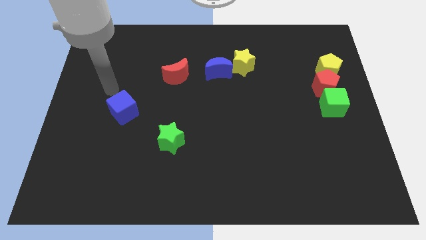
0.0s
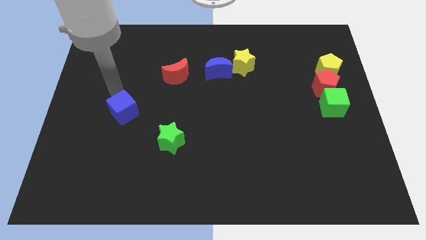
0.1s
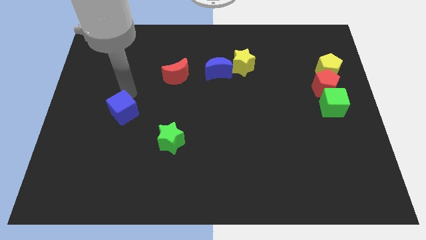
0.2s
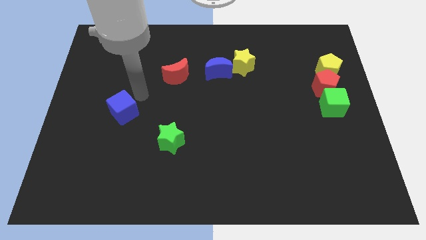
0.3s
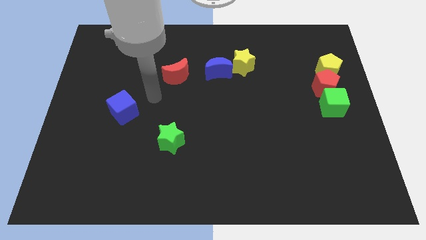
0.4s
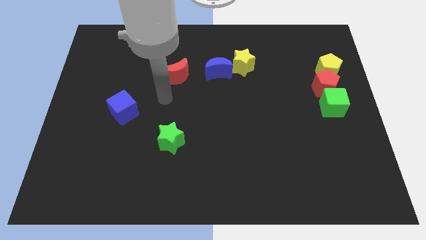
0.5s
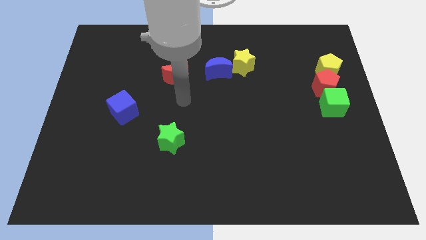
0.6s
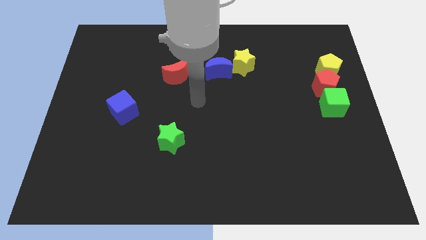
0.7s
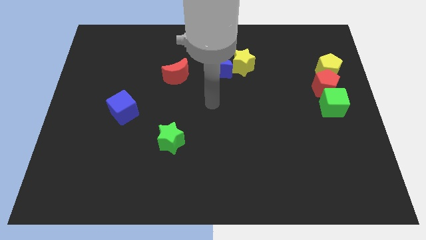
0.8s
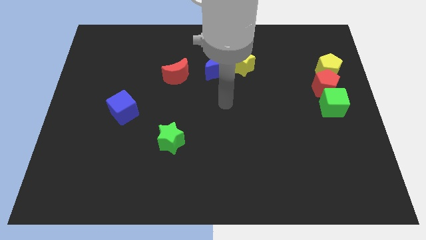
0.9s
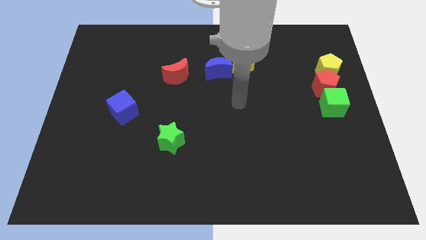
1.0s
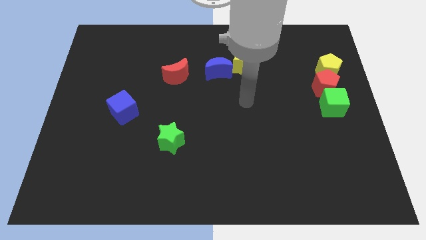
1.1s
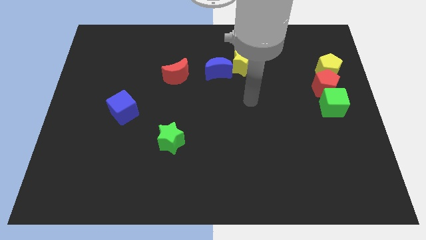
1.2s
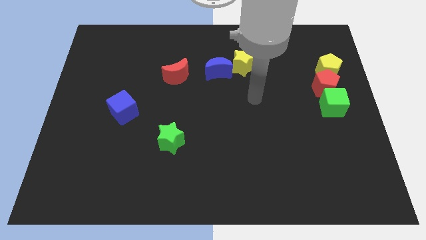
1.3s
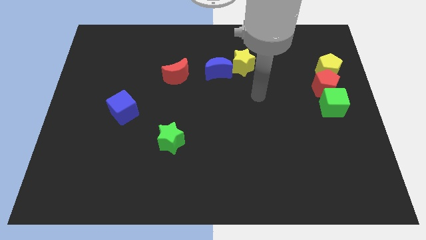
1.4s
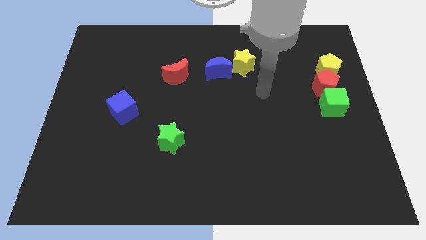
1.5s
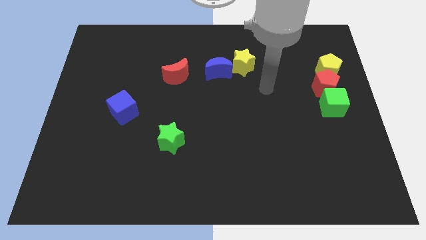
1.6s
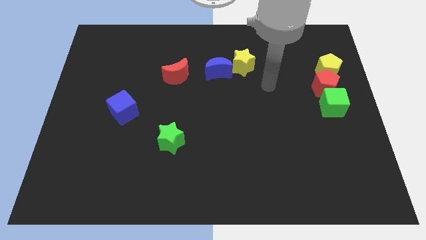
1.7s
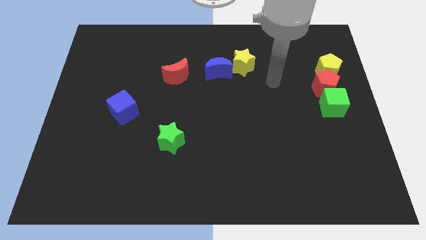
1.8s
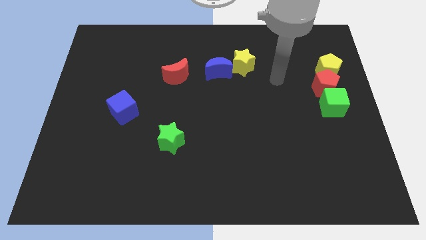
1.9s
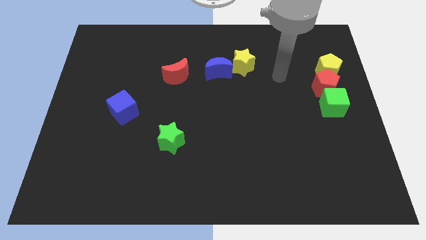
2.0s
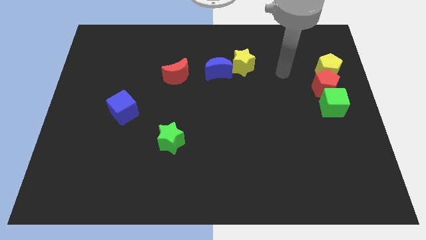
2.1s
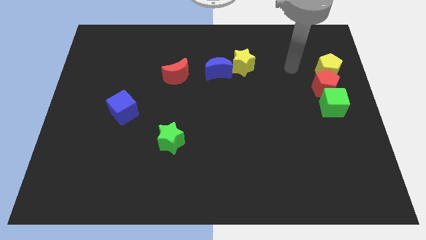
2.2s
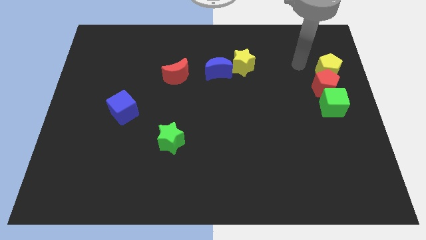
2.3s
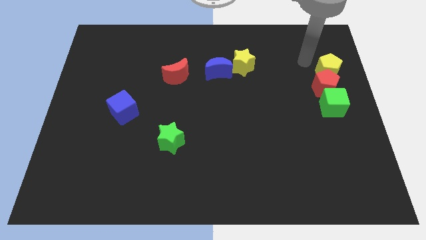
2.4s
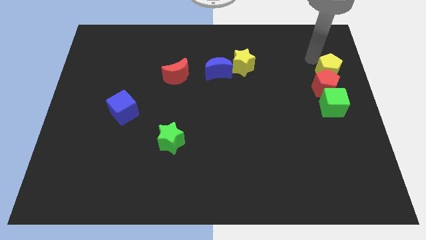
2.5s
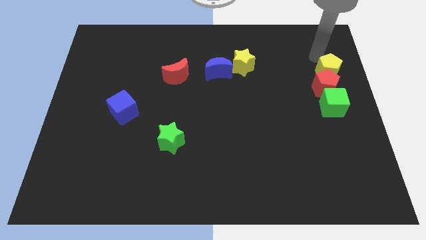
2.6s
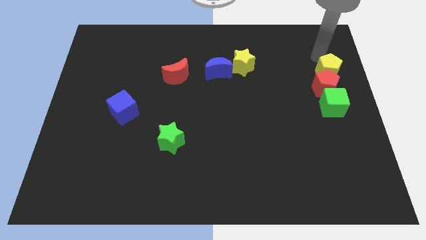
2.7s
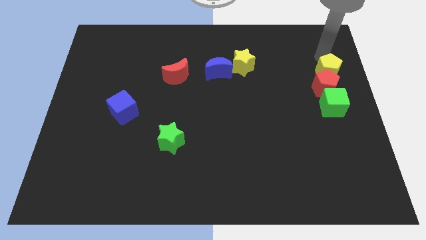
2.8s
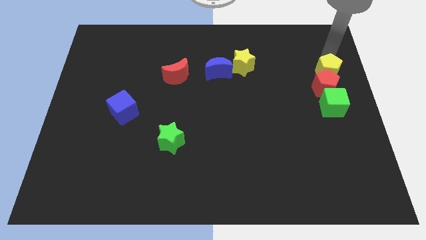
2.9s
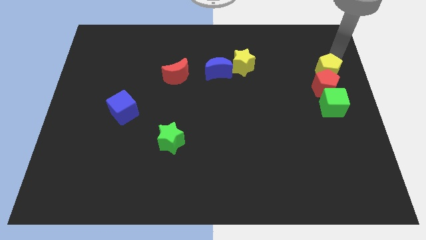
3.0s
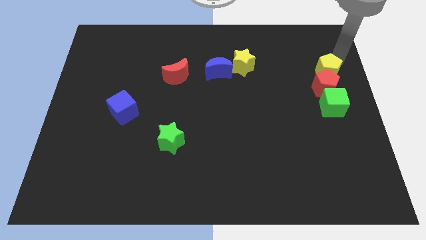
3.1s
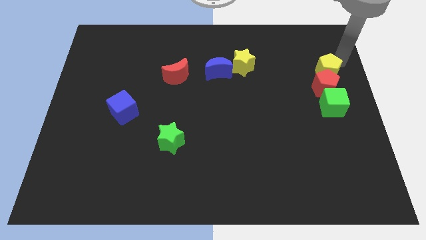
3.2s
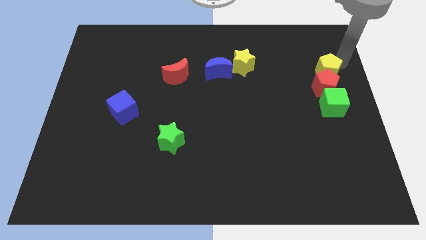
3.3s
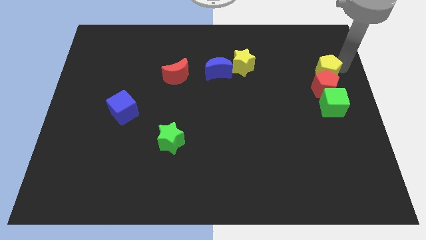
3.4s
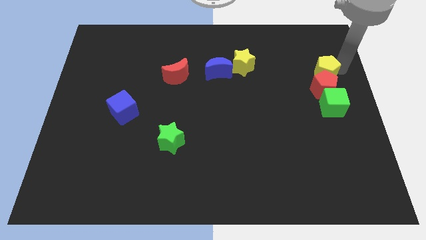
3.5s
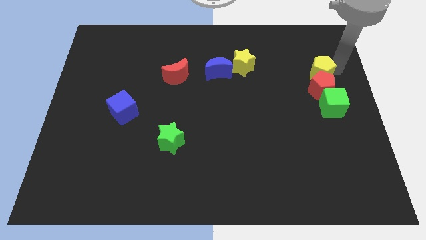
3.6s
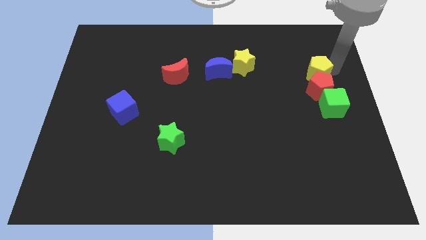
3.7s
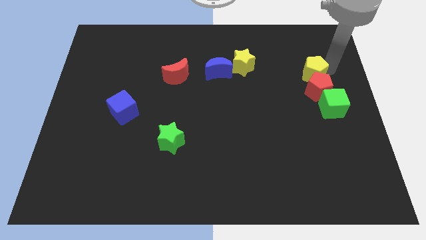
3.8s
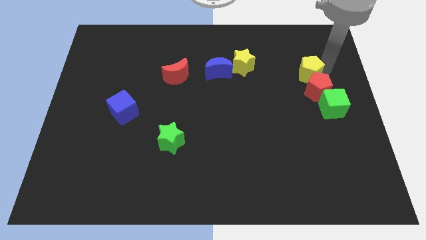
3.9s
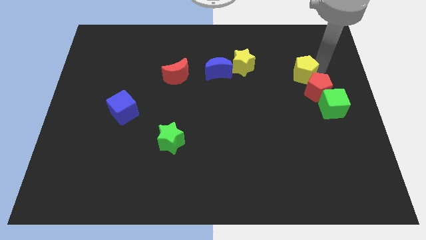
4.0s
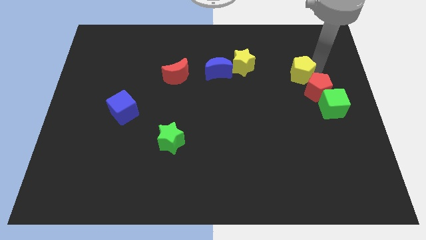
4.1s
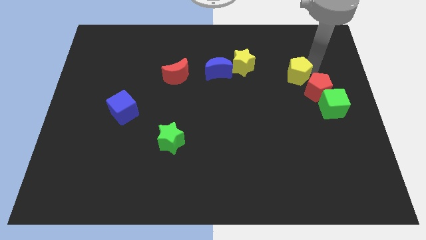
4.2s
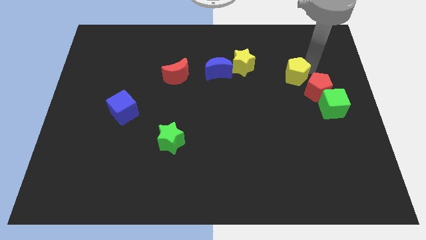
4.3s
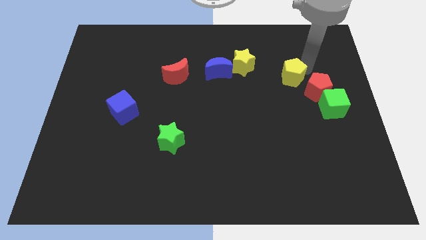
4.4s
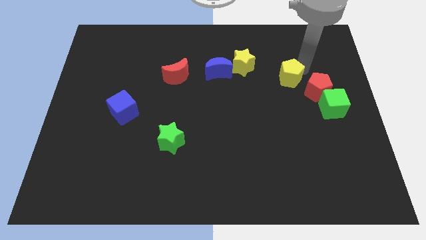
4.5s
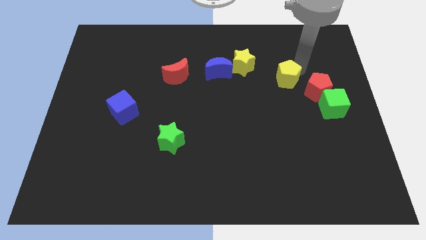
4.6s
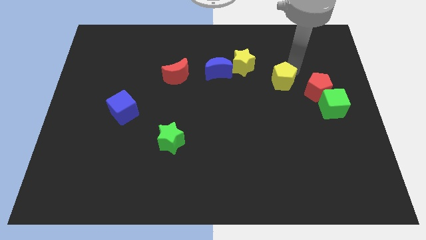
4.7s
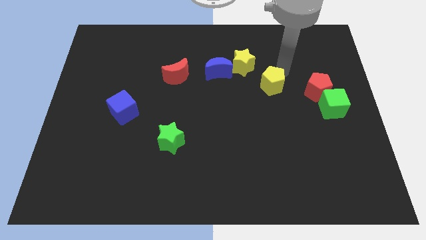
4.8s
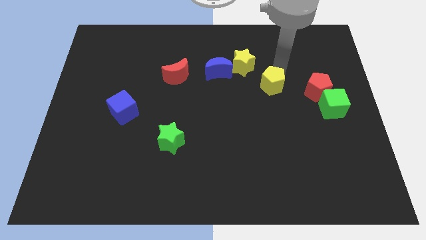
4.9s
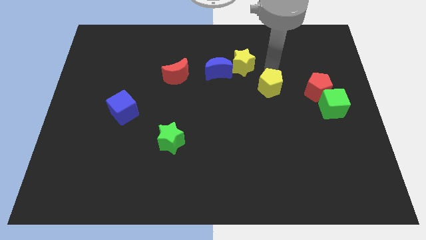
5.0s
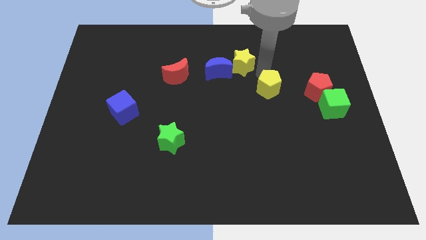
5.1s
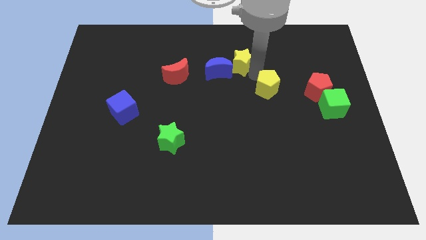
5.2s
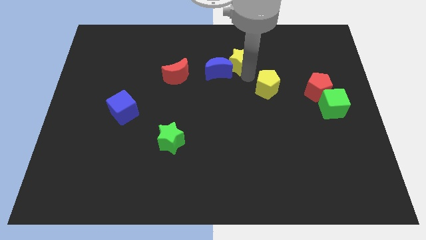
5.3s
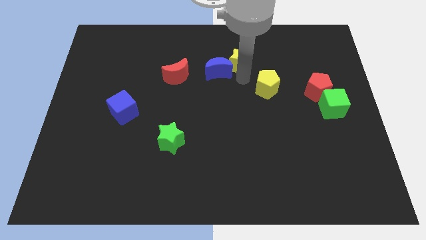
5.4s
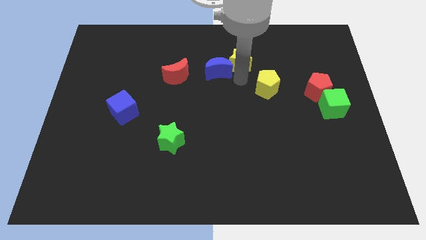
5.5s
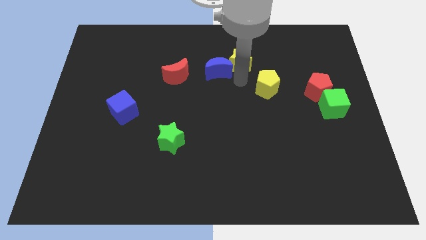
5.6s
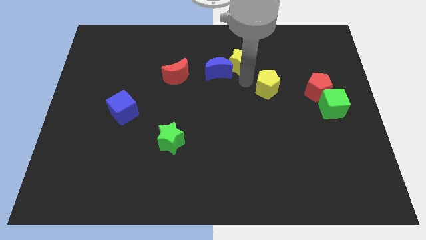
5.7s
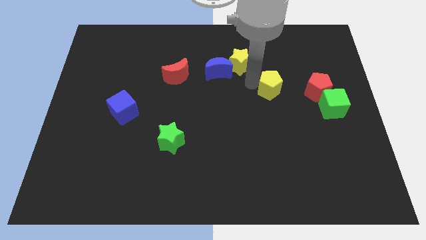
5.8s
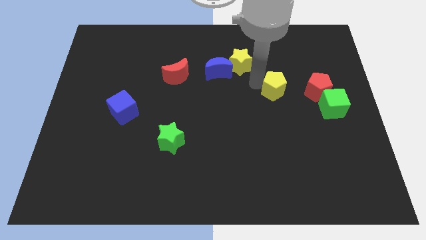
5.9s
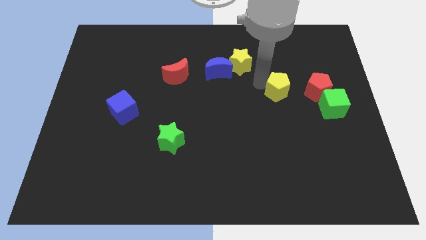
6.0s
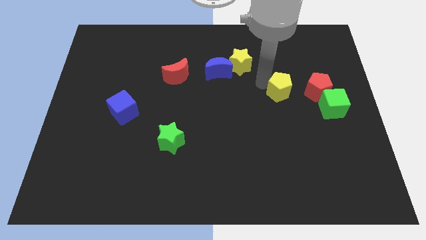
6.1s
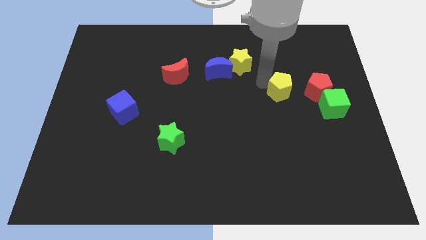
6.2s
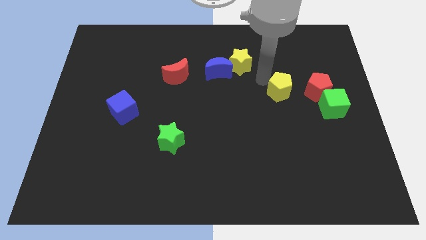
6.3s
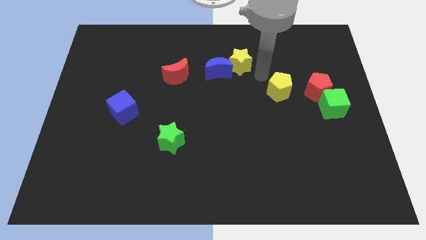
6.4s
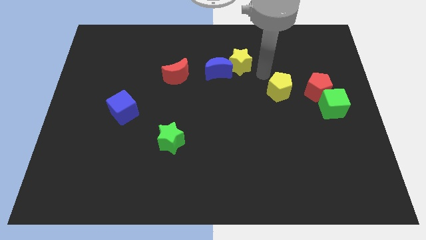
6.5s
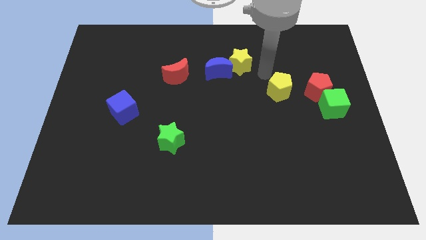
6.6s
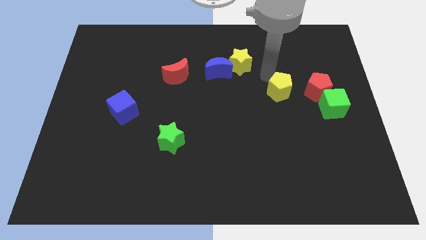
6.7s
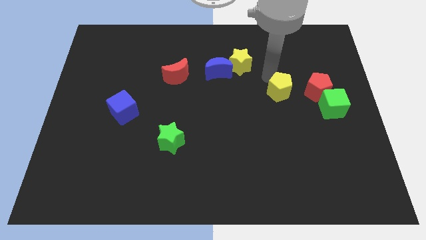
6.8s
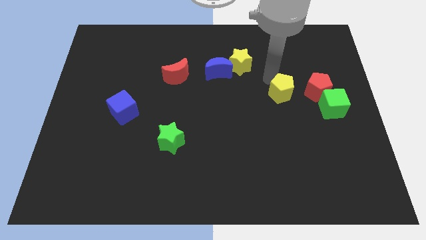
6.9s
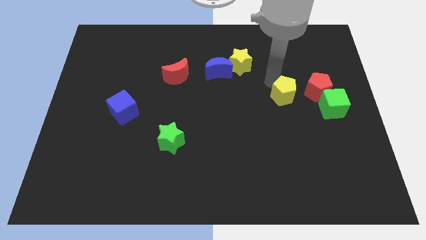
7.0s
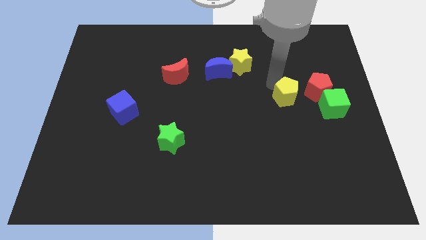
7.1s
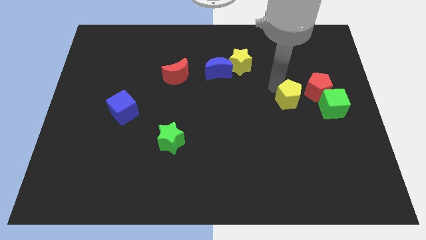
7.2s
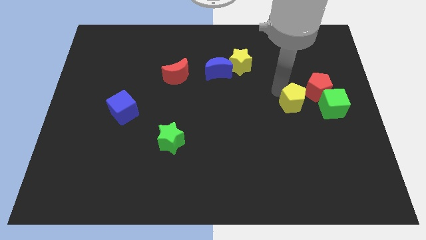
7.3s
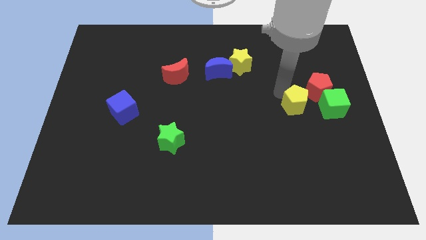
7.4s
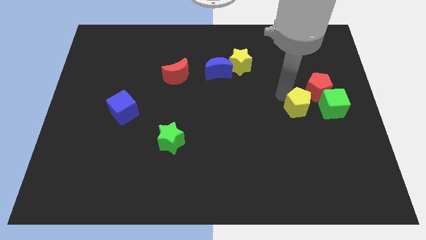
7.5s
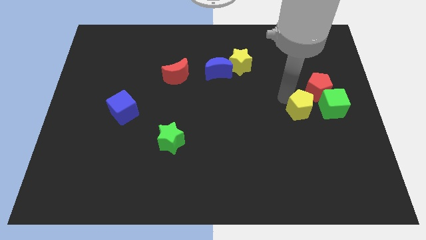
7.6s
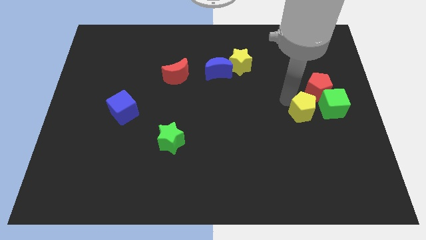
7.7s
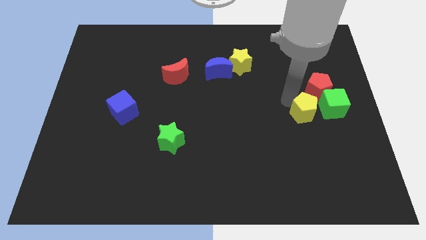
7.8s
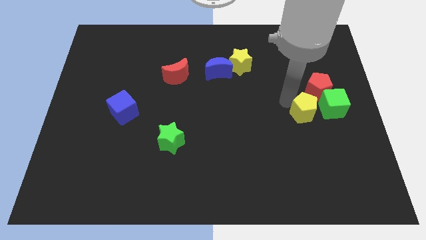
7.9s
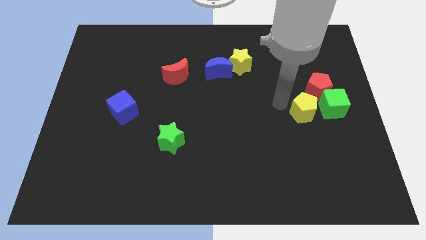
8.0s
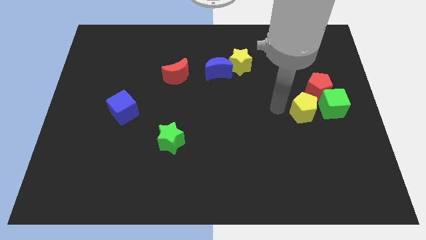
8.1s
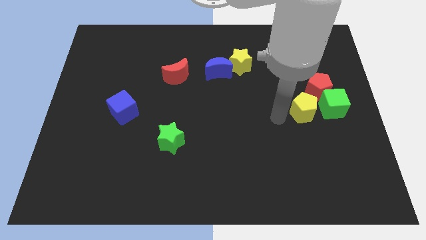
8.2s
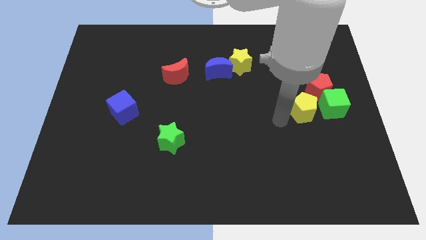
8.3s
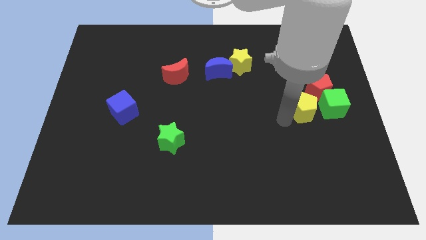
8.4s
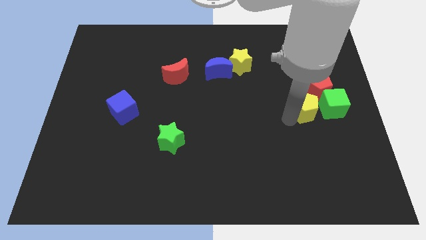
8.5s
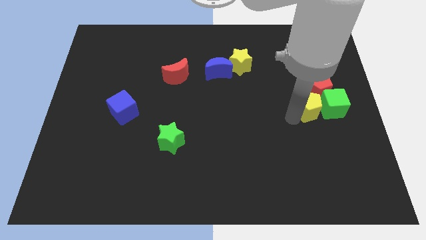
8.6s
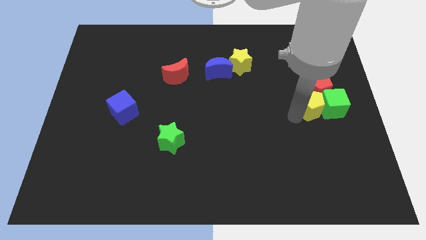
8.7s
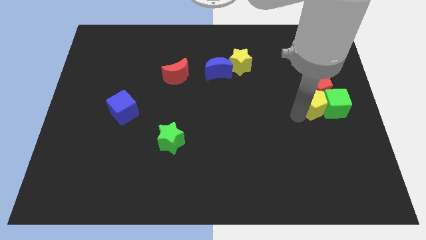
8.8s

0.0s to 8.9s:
push the yellow pentagon close to the green cube
